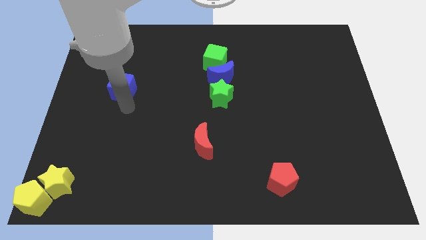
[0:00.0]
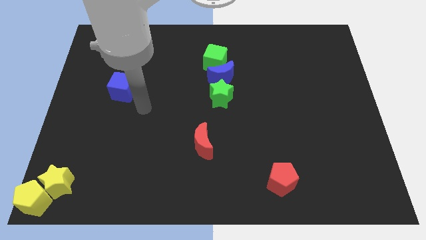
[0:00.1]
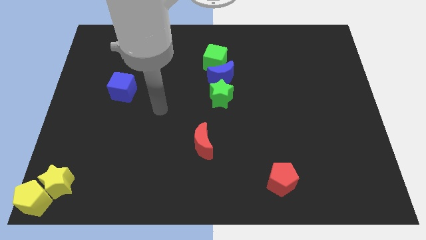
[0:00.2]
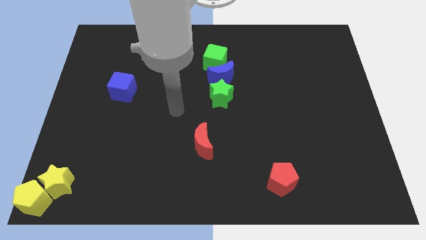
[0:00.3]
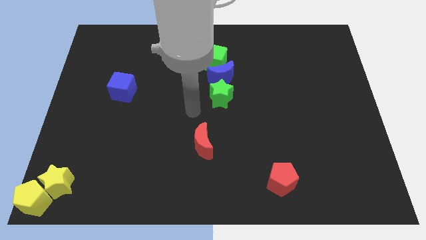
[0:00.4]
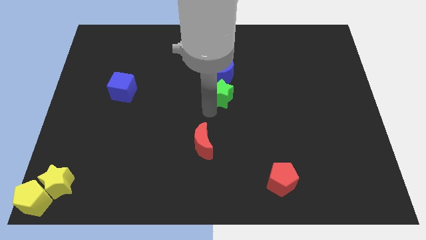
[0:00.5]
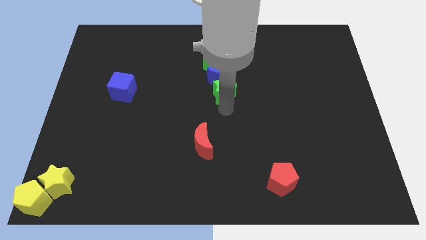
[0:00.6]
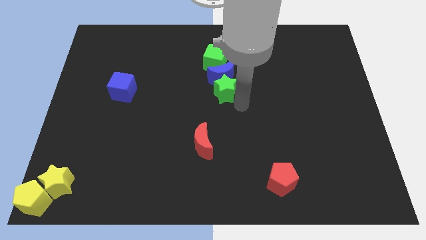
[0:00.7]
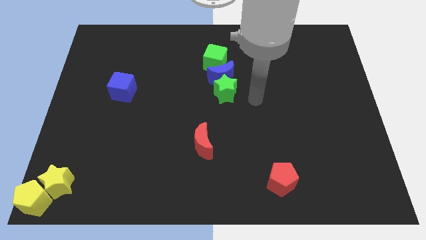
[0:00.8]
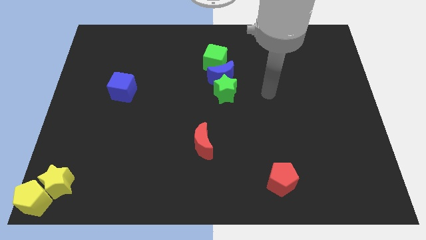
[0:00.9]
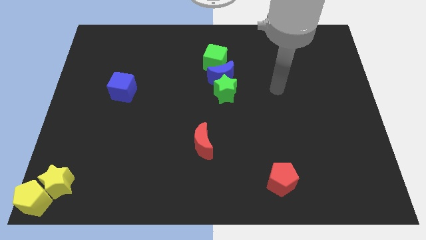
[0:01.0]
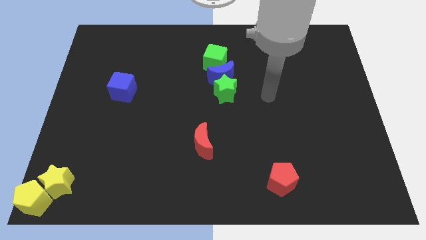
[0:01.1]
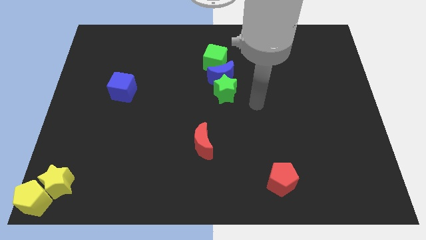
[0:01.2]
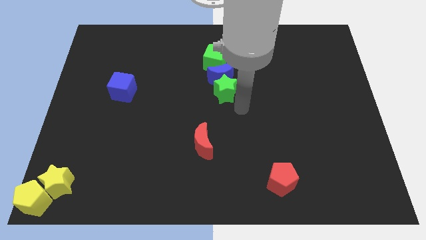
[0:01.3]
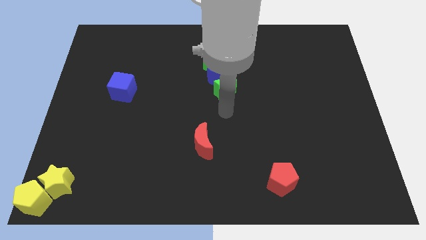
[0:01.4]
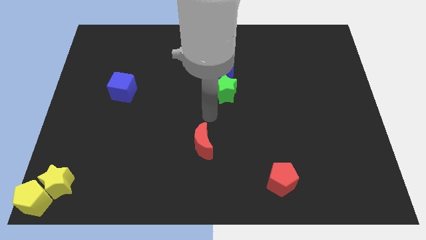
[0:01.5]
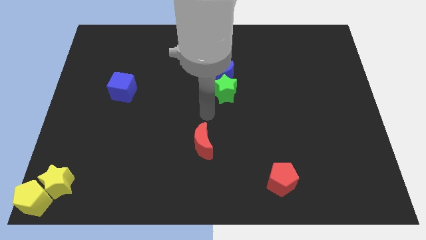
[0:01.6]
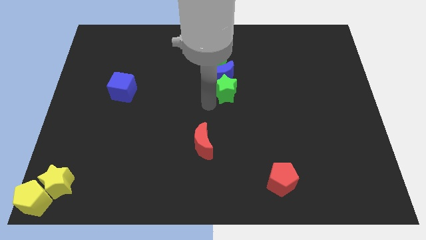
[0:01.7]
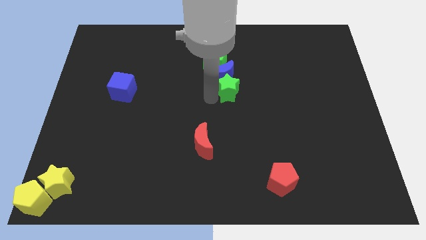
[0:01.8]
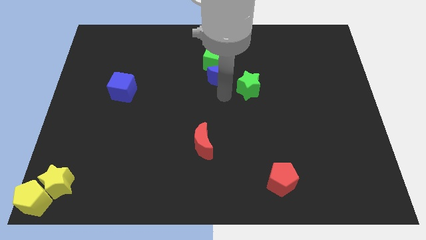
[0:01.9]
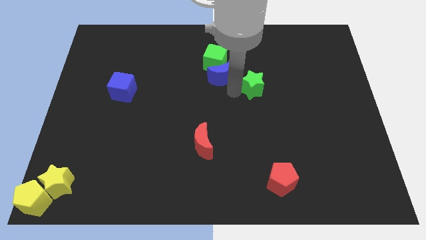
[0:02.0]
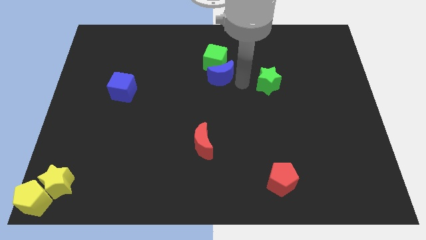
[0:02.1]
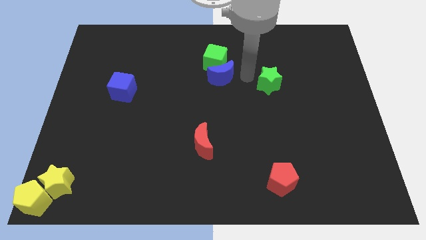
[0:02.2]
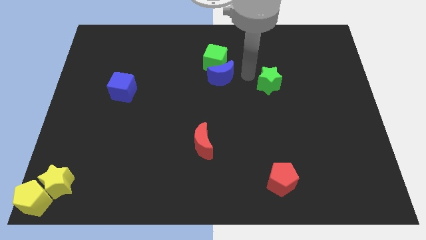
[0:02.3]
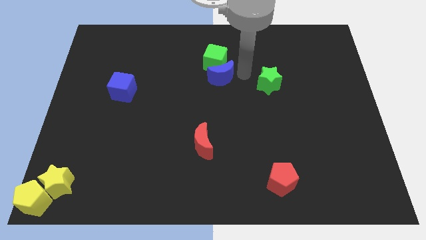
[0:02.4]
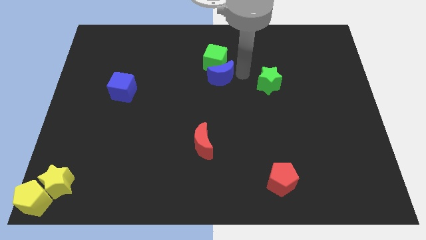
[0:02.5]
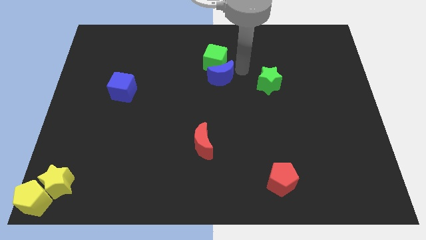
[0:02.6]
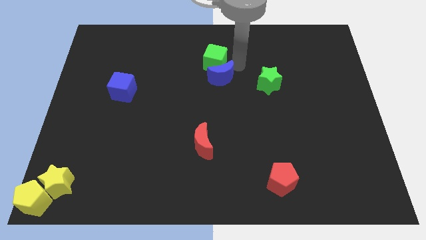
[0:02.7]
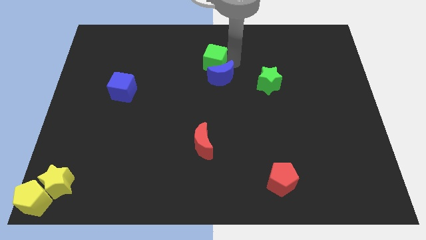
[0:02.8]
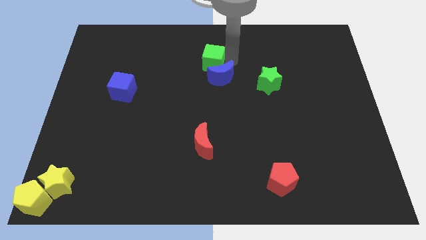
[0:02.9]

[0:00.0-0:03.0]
separate the green star from the group of blocks

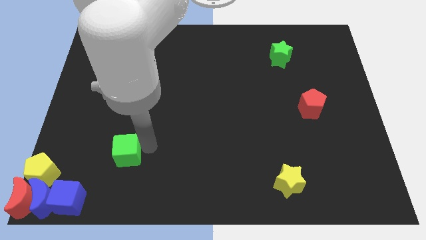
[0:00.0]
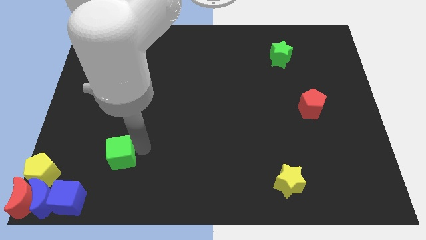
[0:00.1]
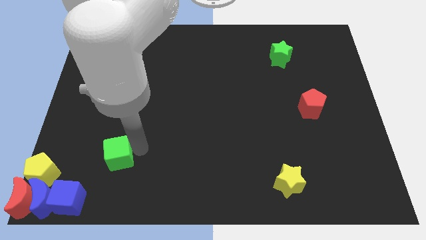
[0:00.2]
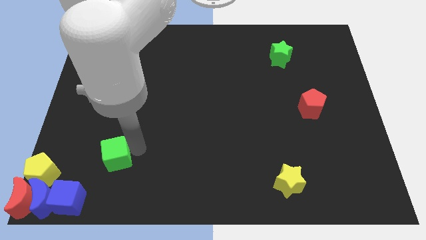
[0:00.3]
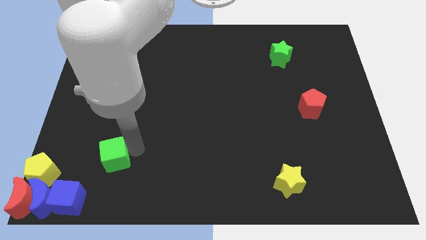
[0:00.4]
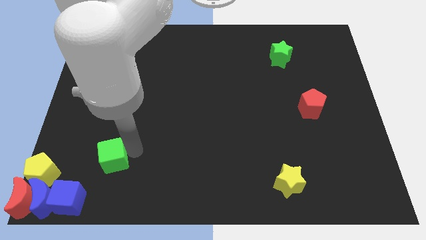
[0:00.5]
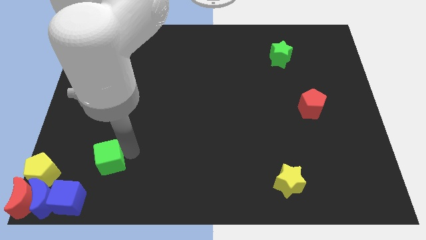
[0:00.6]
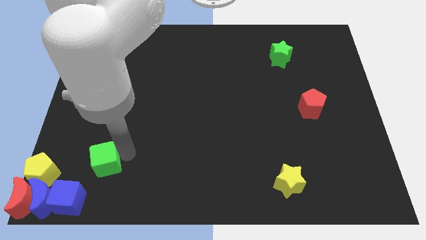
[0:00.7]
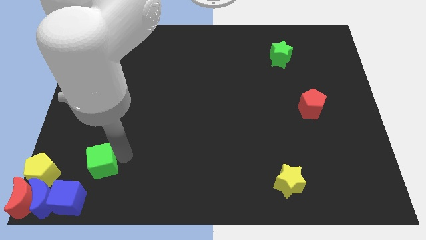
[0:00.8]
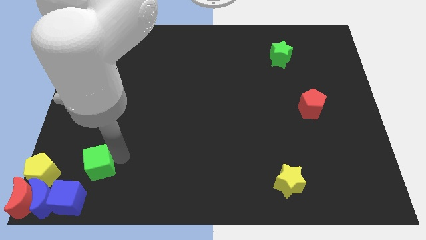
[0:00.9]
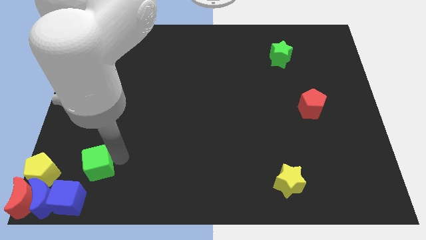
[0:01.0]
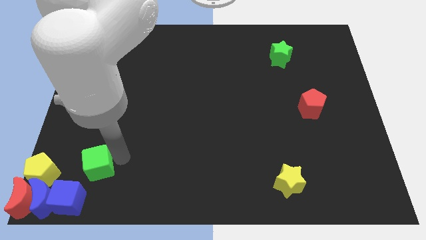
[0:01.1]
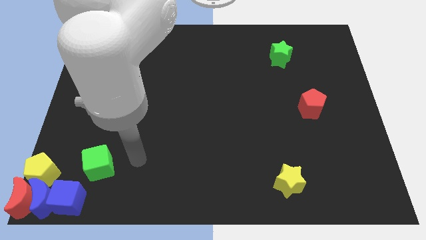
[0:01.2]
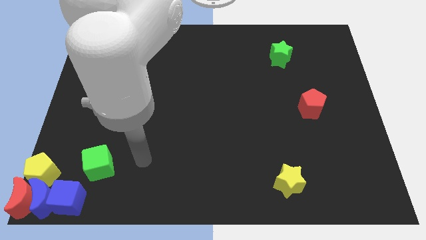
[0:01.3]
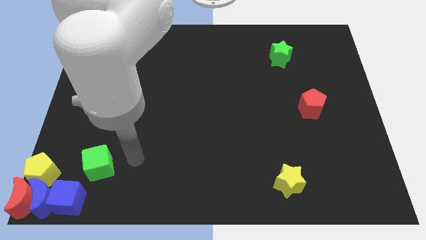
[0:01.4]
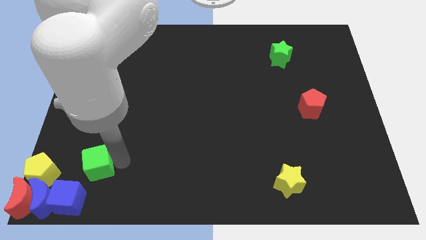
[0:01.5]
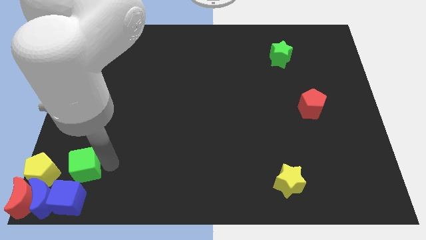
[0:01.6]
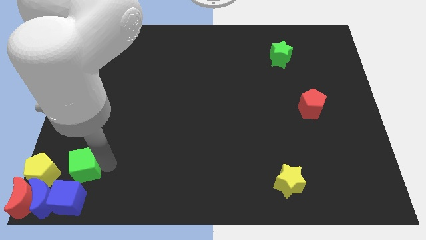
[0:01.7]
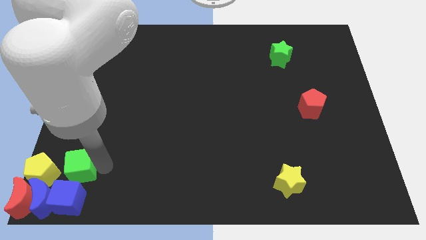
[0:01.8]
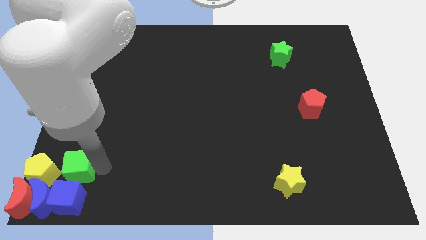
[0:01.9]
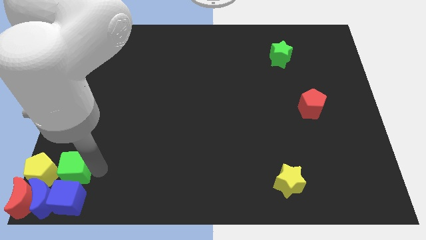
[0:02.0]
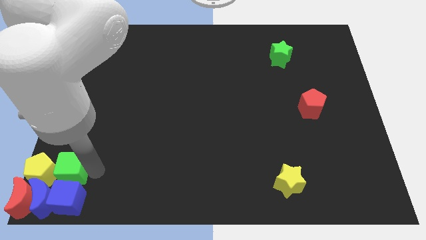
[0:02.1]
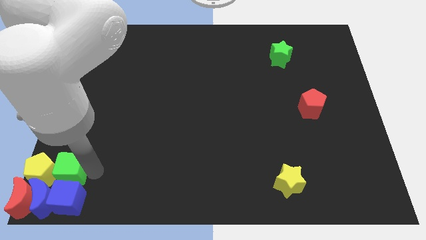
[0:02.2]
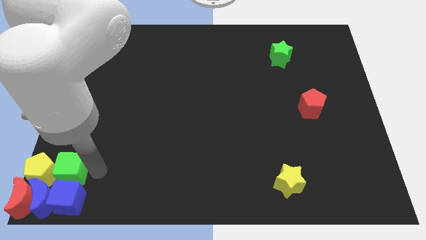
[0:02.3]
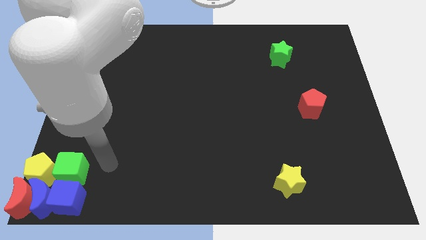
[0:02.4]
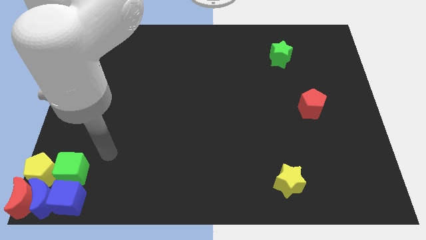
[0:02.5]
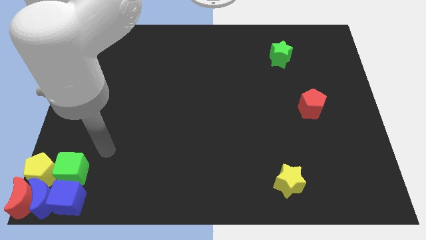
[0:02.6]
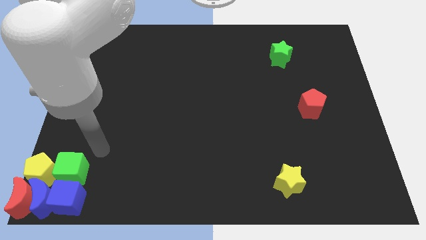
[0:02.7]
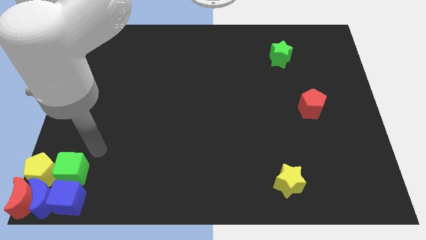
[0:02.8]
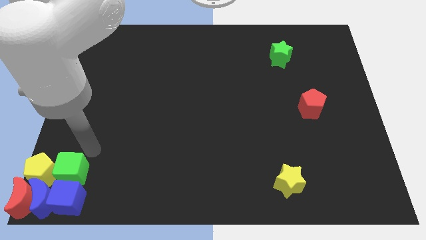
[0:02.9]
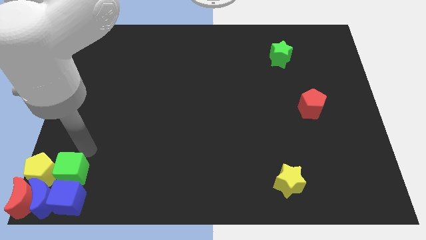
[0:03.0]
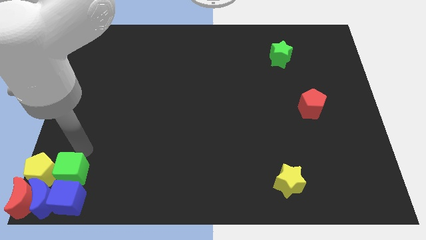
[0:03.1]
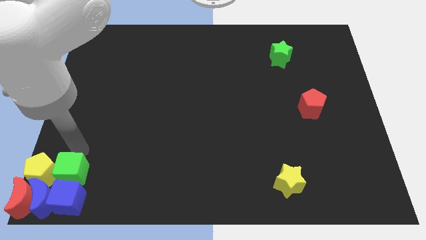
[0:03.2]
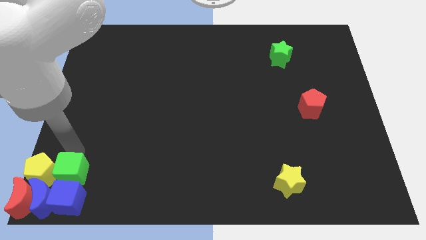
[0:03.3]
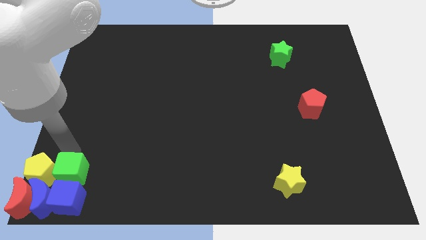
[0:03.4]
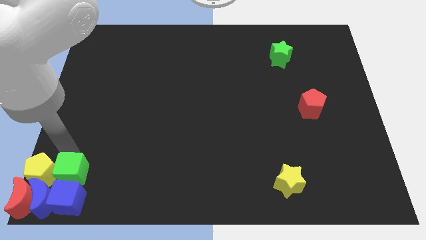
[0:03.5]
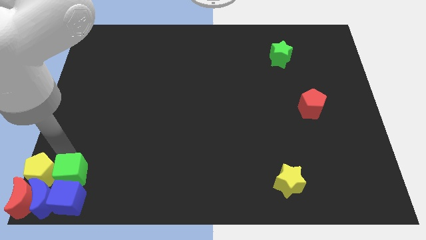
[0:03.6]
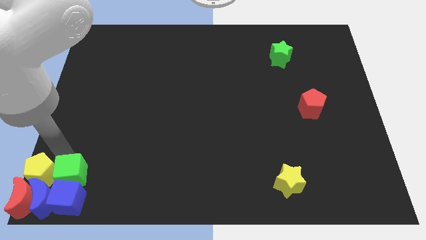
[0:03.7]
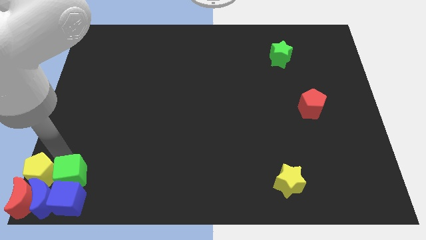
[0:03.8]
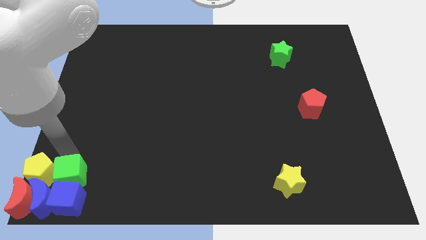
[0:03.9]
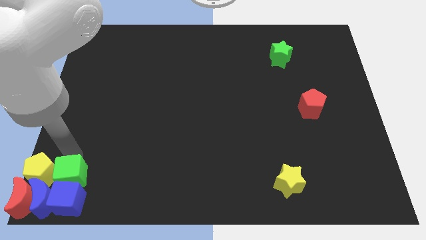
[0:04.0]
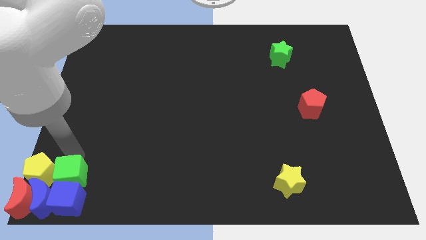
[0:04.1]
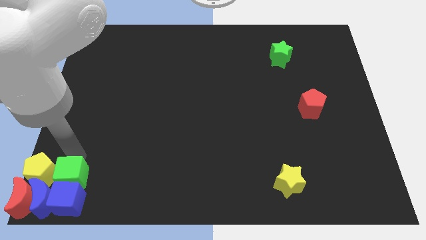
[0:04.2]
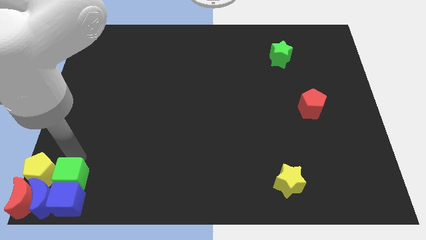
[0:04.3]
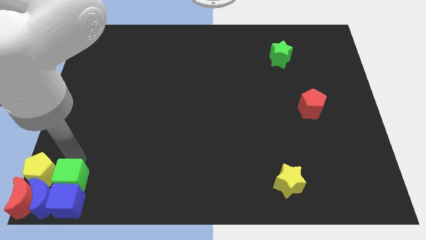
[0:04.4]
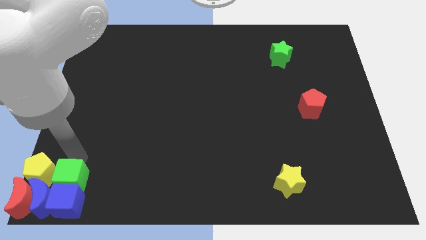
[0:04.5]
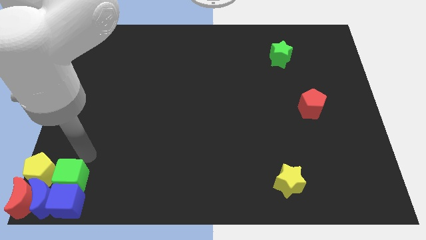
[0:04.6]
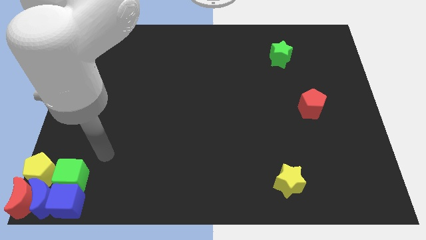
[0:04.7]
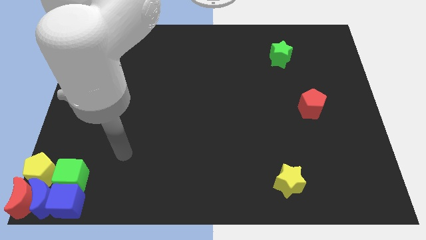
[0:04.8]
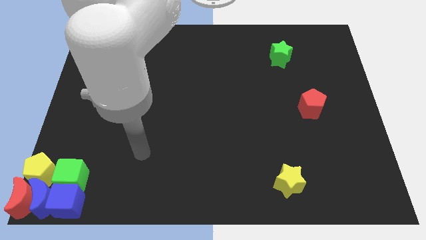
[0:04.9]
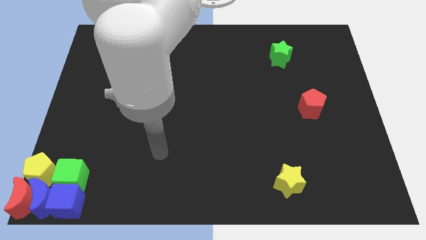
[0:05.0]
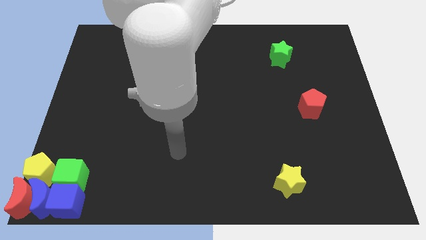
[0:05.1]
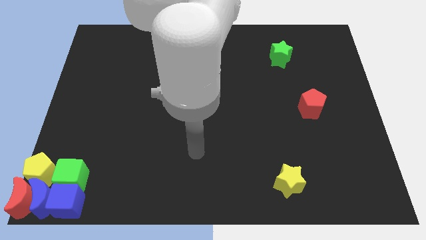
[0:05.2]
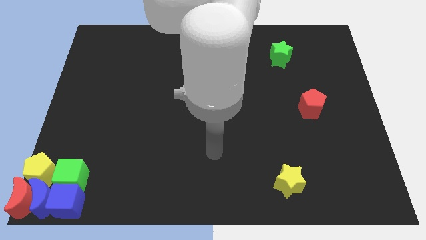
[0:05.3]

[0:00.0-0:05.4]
place the green cube to the right of the yellow pentagon

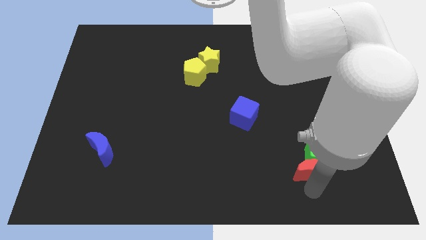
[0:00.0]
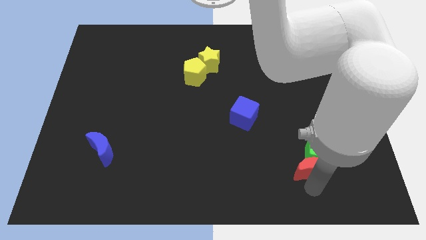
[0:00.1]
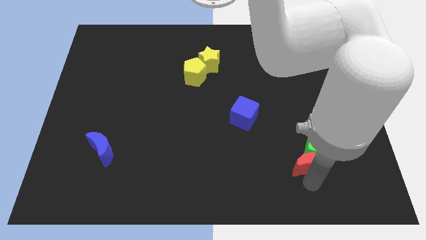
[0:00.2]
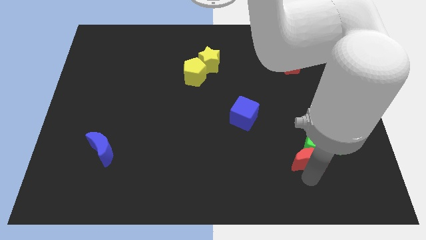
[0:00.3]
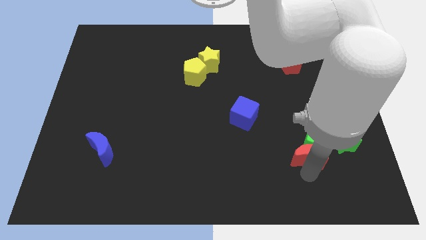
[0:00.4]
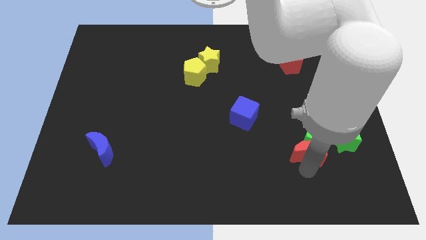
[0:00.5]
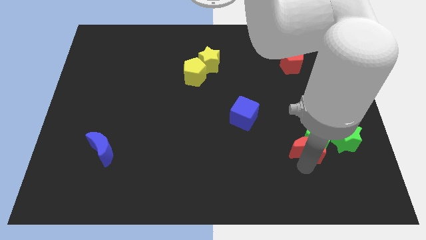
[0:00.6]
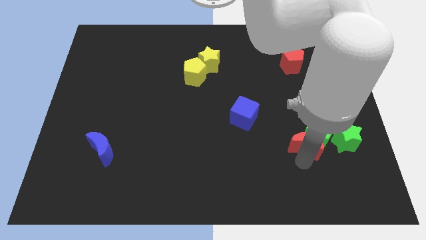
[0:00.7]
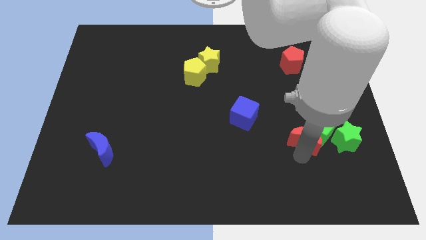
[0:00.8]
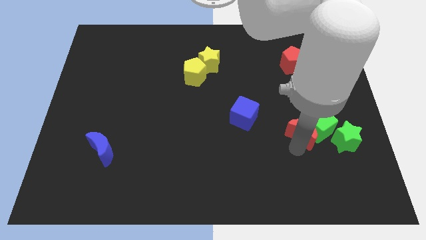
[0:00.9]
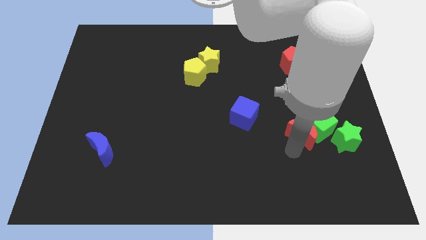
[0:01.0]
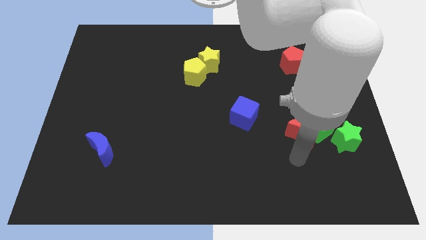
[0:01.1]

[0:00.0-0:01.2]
push the red moon along with the green cube slightly up
